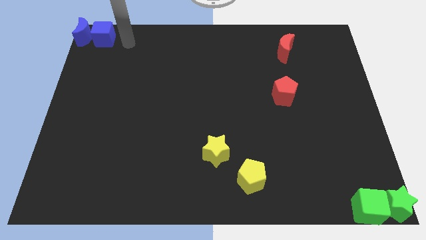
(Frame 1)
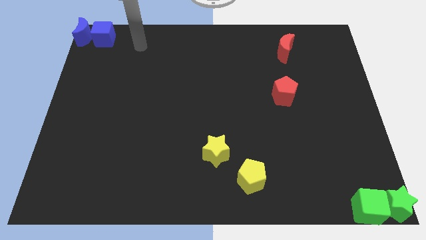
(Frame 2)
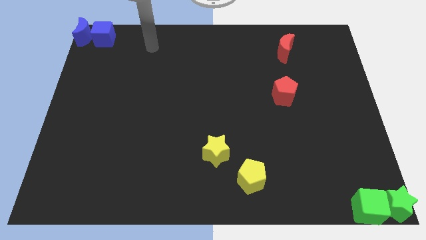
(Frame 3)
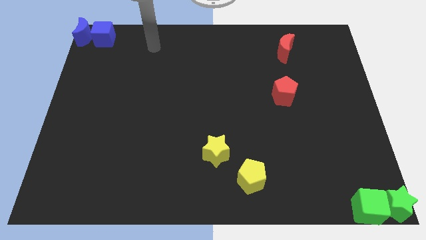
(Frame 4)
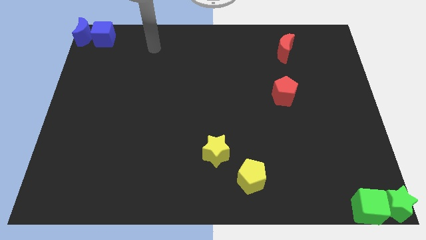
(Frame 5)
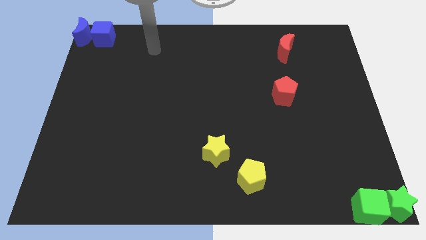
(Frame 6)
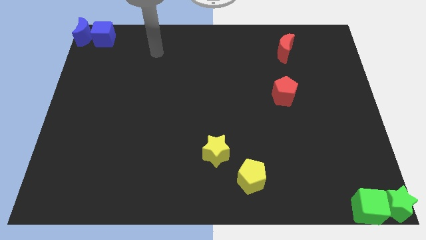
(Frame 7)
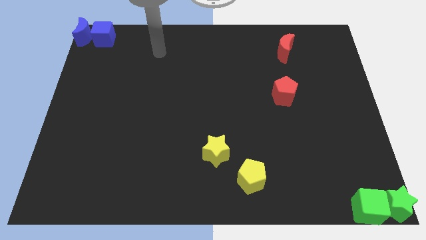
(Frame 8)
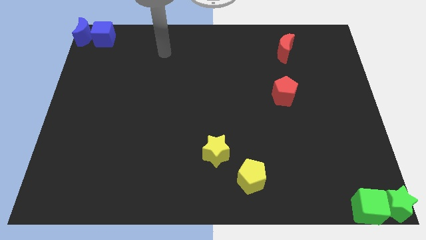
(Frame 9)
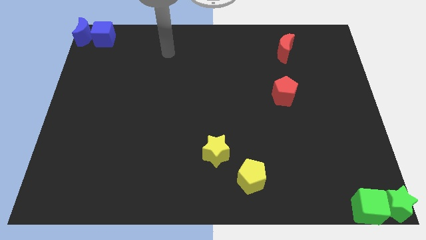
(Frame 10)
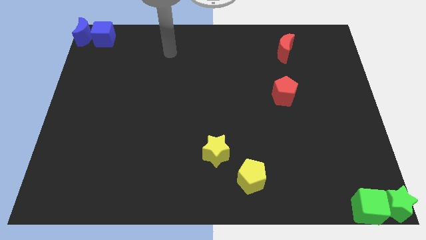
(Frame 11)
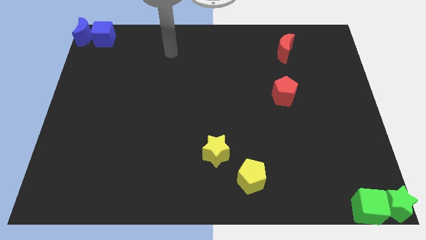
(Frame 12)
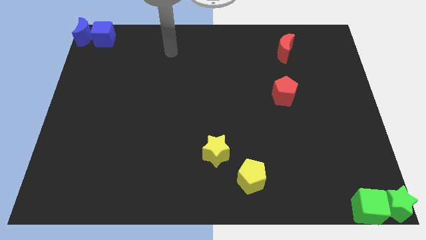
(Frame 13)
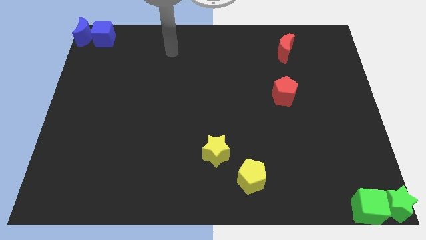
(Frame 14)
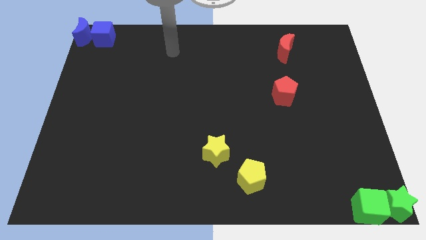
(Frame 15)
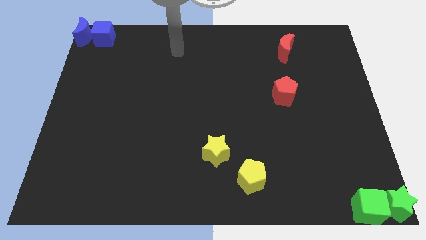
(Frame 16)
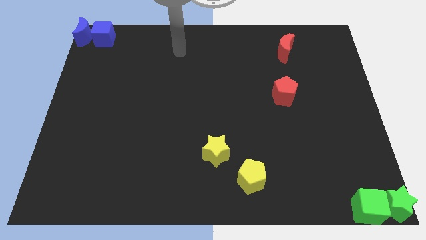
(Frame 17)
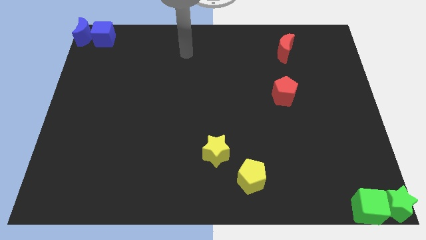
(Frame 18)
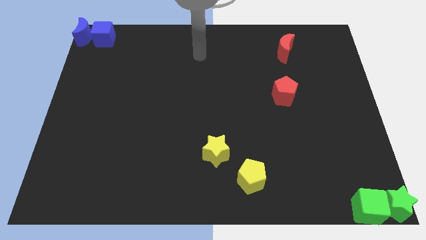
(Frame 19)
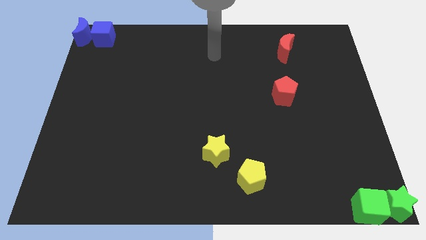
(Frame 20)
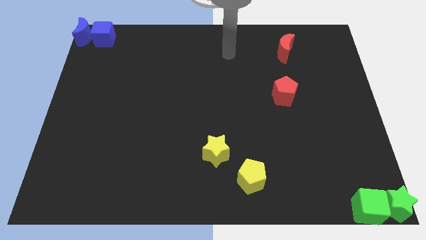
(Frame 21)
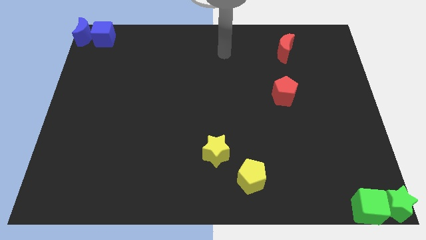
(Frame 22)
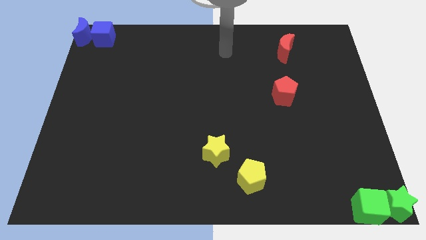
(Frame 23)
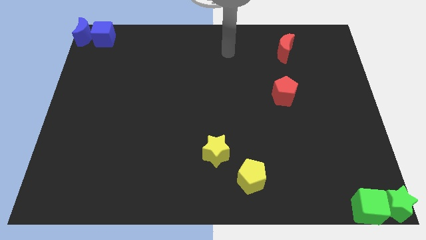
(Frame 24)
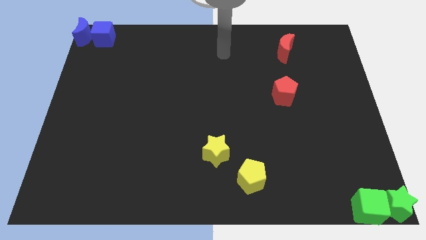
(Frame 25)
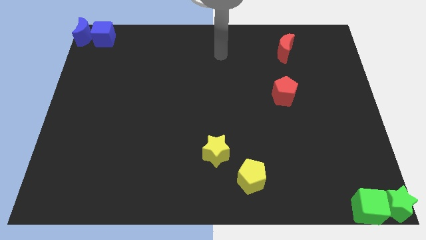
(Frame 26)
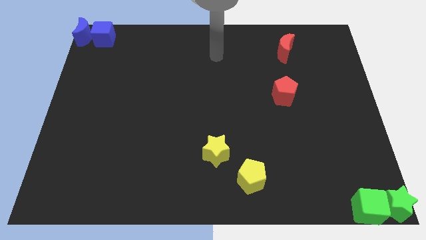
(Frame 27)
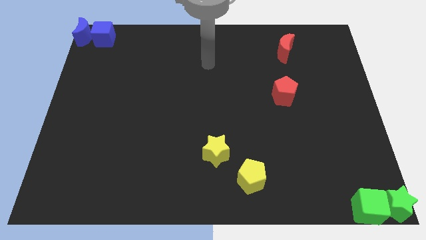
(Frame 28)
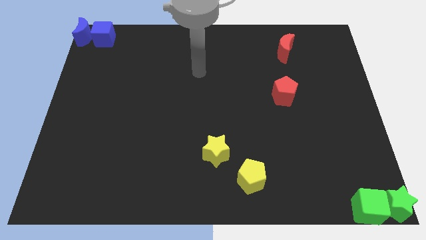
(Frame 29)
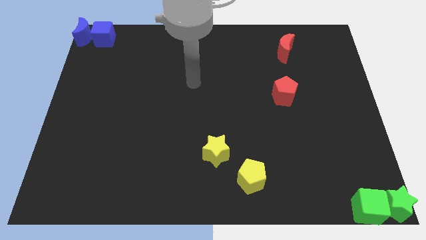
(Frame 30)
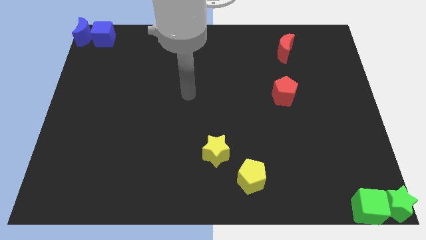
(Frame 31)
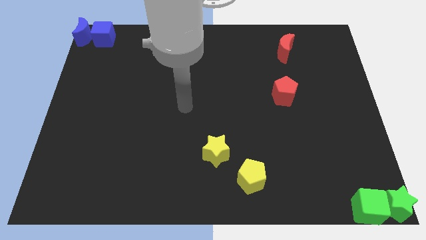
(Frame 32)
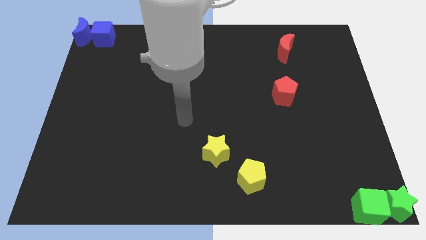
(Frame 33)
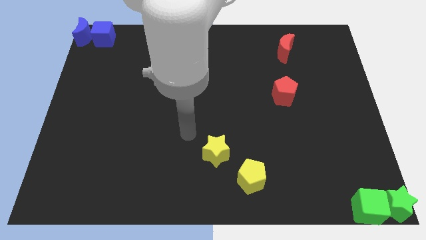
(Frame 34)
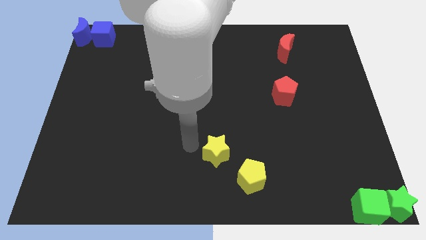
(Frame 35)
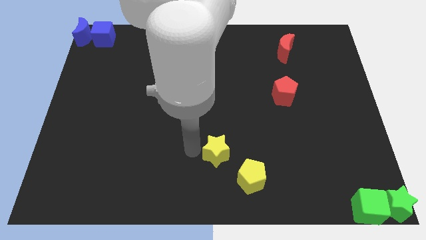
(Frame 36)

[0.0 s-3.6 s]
point your arm at the left of the yellow star

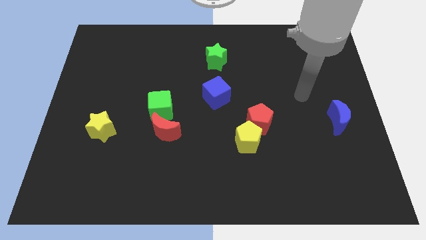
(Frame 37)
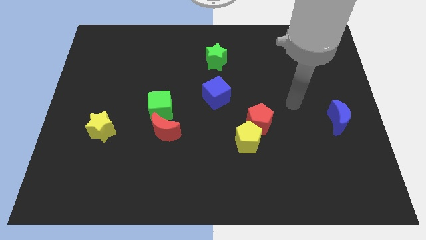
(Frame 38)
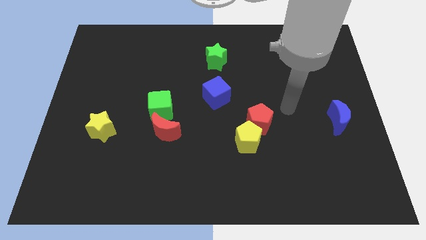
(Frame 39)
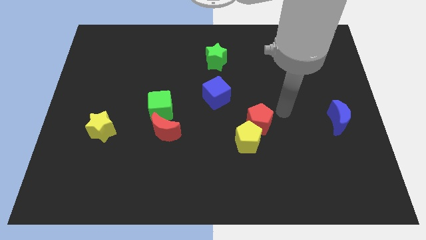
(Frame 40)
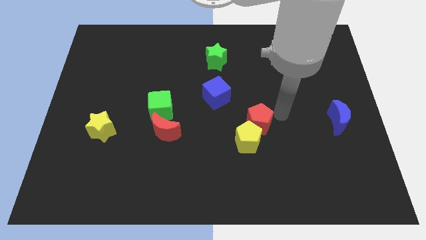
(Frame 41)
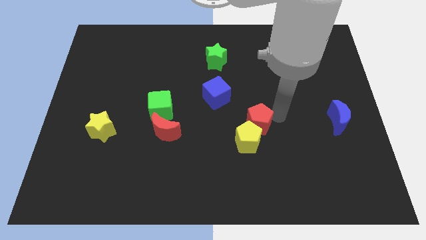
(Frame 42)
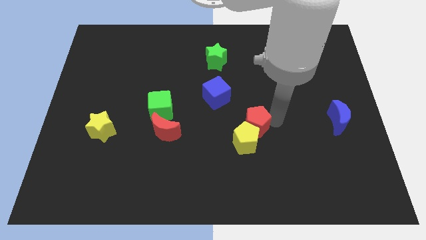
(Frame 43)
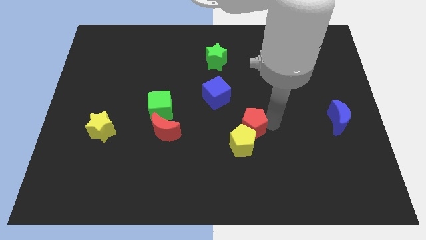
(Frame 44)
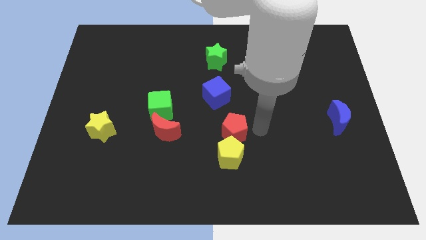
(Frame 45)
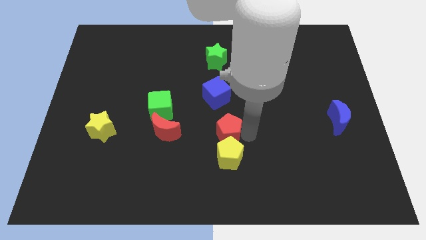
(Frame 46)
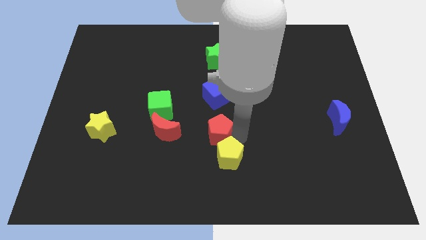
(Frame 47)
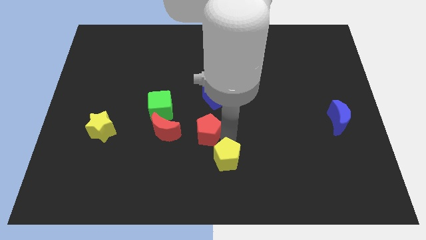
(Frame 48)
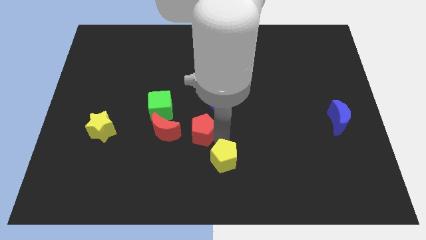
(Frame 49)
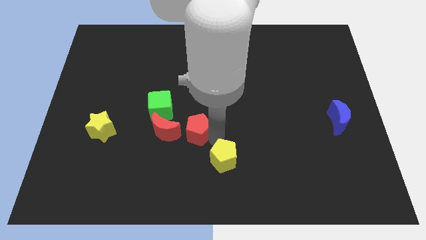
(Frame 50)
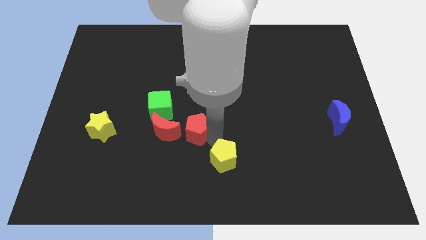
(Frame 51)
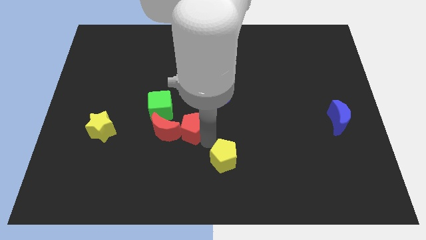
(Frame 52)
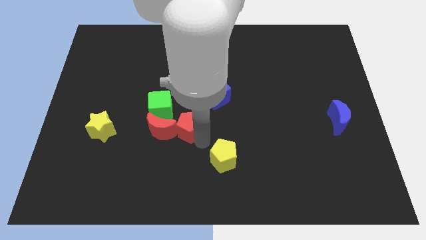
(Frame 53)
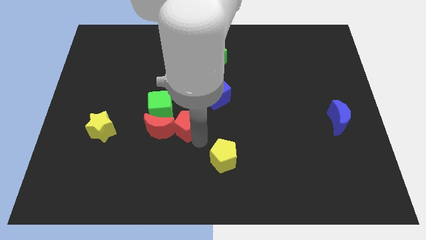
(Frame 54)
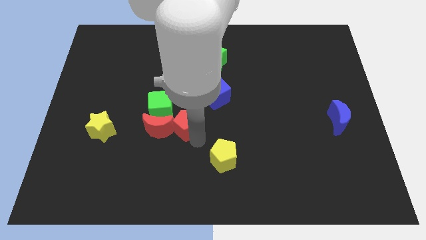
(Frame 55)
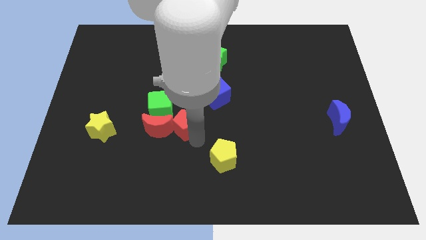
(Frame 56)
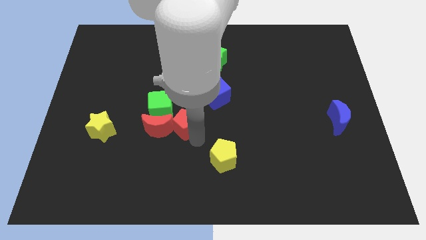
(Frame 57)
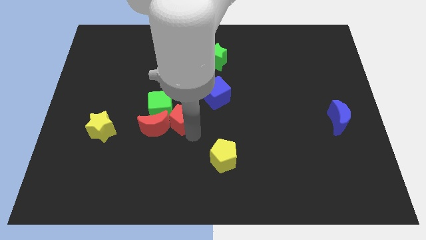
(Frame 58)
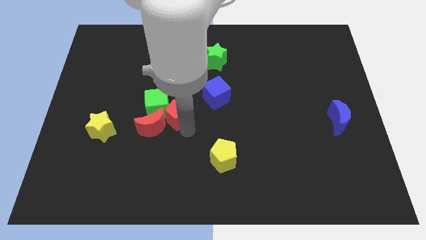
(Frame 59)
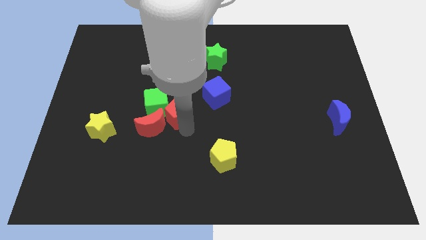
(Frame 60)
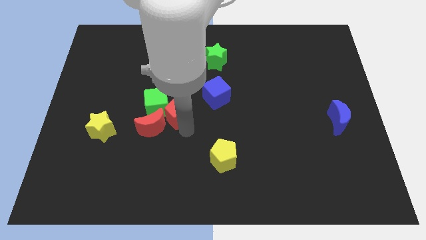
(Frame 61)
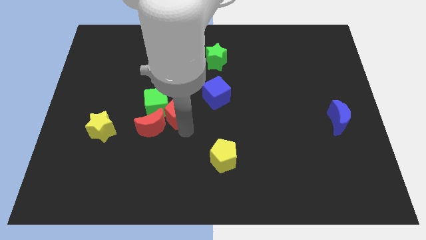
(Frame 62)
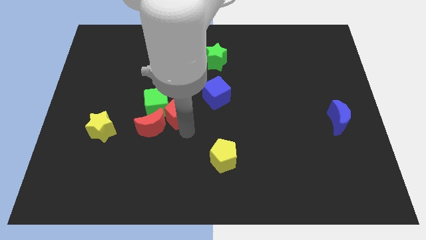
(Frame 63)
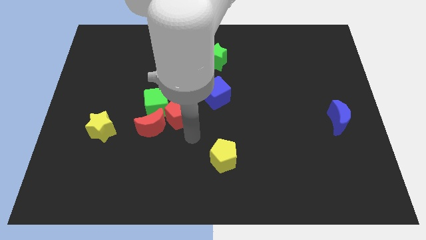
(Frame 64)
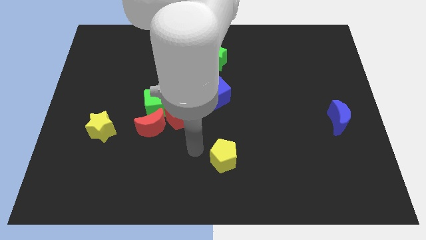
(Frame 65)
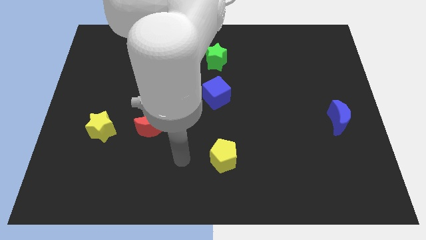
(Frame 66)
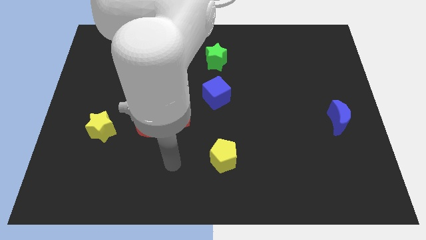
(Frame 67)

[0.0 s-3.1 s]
group up the red blocks and green cube at the left side of the blue cube

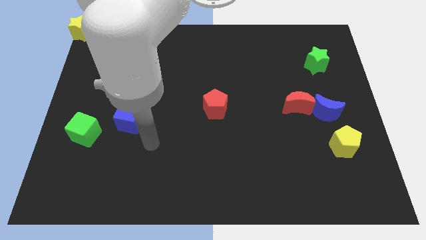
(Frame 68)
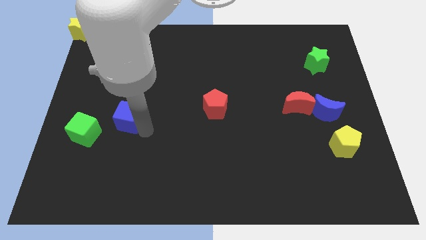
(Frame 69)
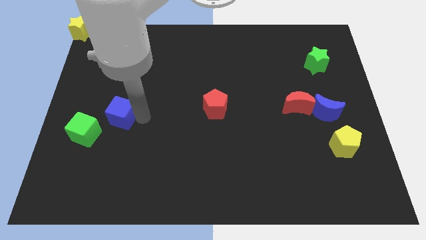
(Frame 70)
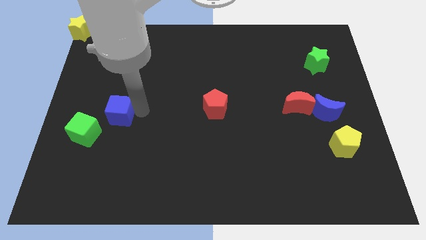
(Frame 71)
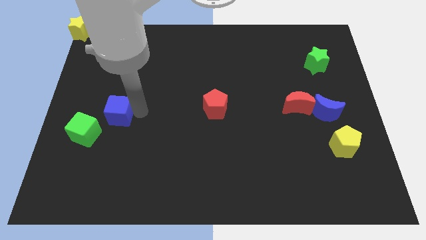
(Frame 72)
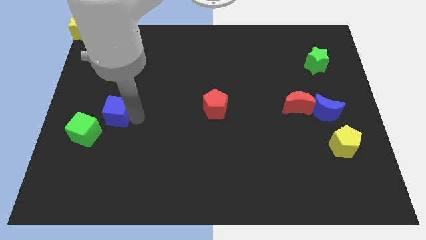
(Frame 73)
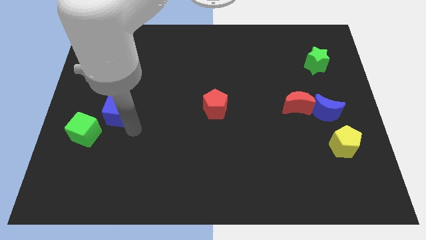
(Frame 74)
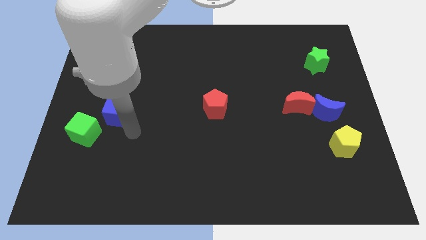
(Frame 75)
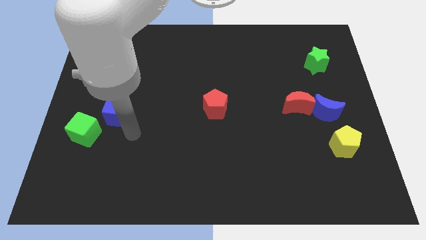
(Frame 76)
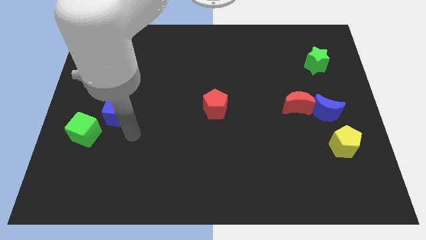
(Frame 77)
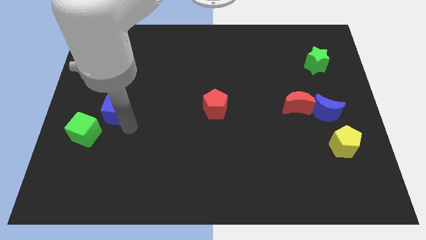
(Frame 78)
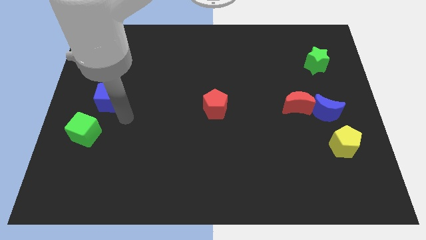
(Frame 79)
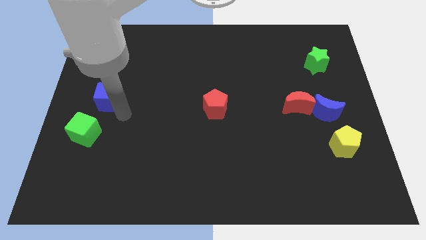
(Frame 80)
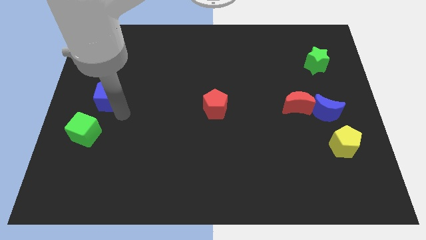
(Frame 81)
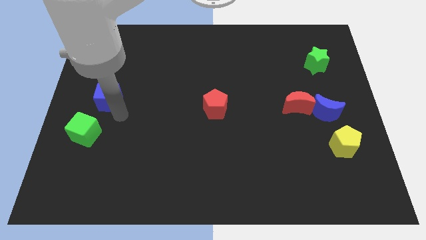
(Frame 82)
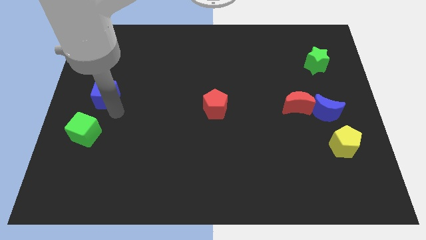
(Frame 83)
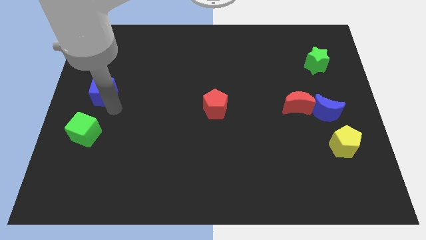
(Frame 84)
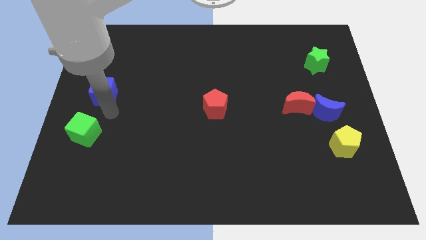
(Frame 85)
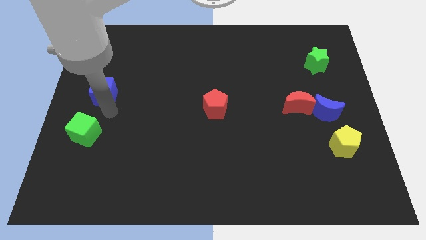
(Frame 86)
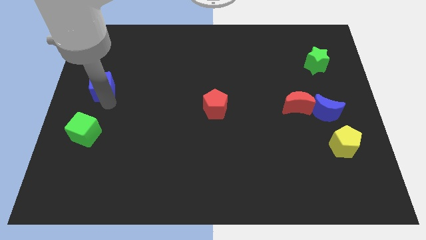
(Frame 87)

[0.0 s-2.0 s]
place the blue cube to the top of the green cube

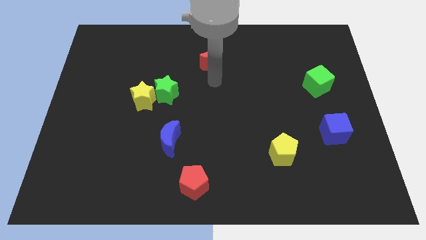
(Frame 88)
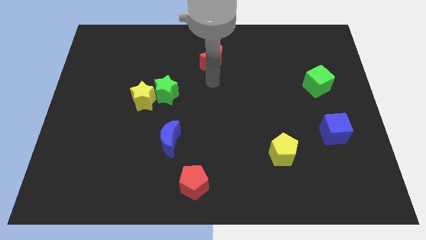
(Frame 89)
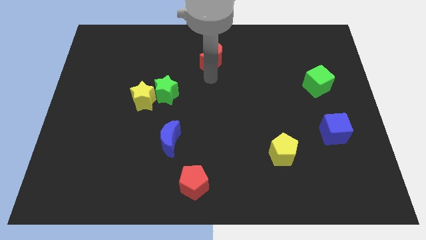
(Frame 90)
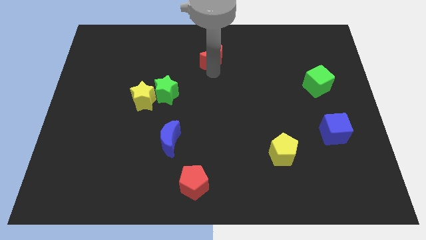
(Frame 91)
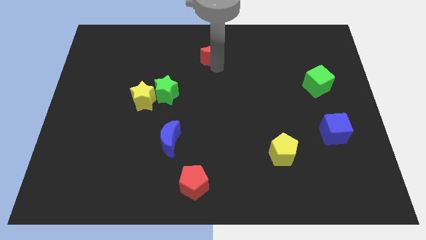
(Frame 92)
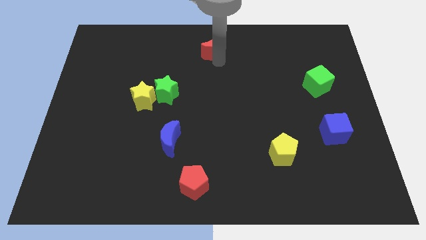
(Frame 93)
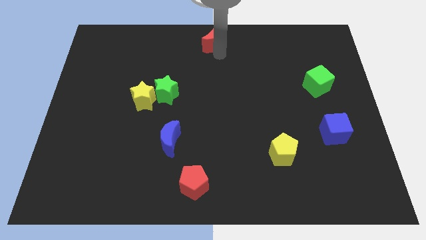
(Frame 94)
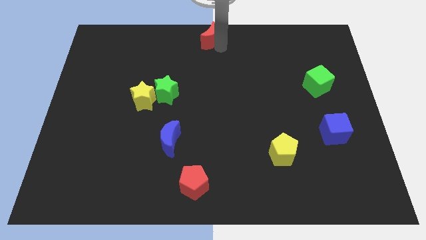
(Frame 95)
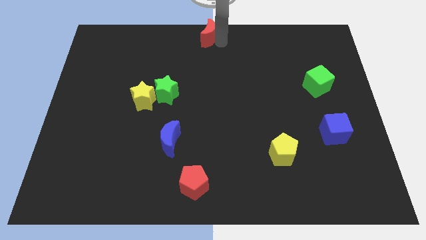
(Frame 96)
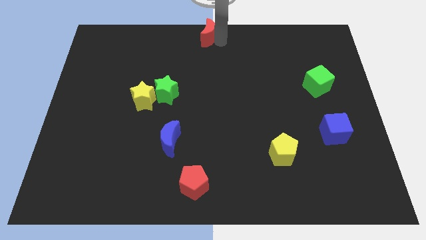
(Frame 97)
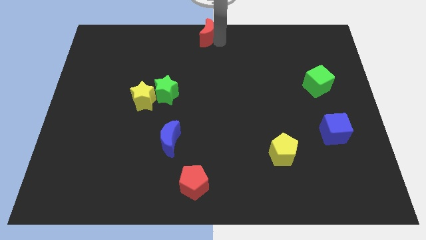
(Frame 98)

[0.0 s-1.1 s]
put the red crescent at the top center of the board
